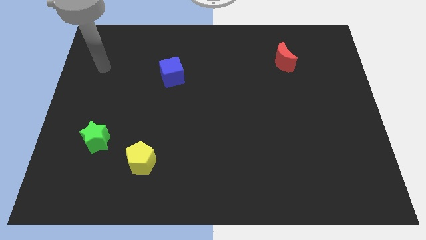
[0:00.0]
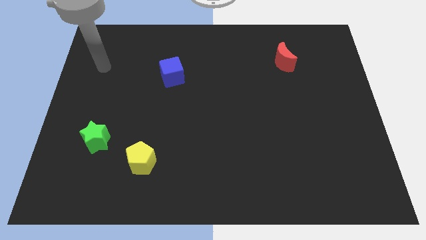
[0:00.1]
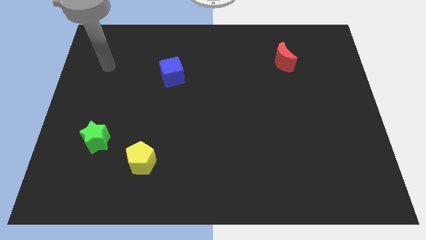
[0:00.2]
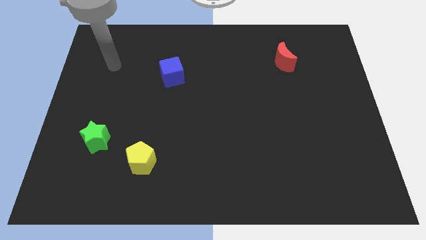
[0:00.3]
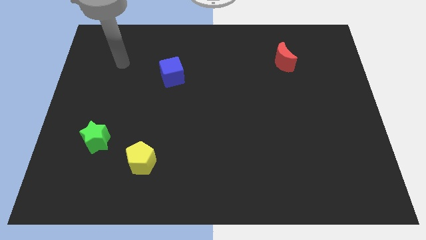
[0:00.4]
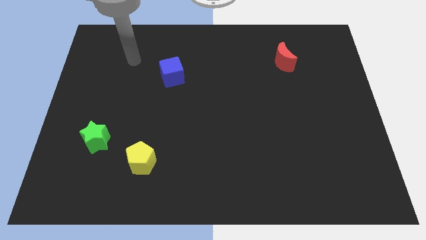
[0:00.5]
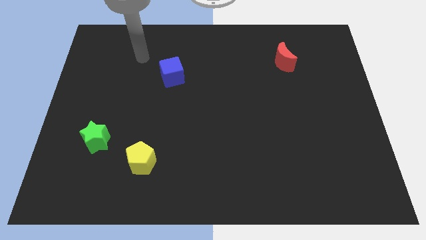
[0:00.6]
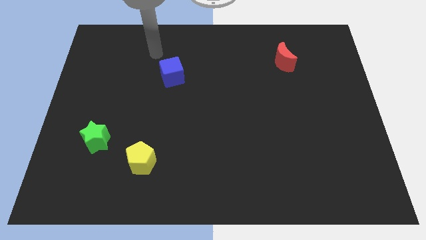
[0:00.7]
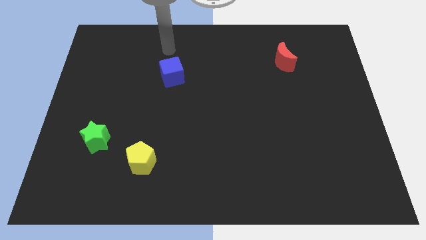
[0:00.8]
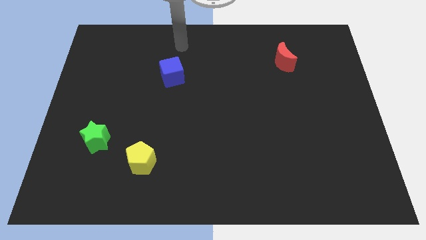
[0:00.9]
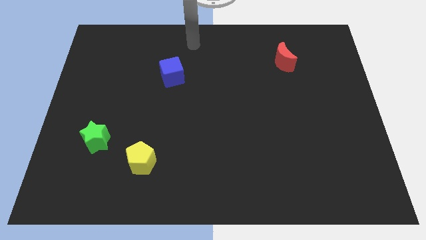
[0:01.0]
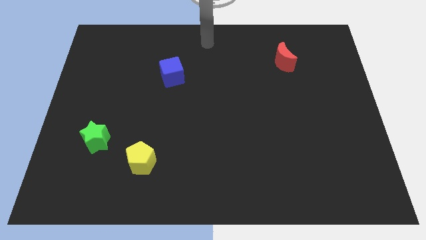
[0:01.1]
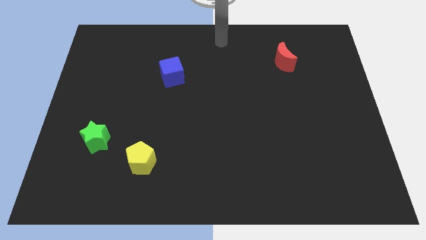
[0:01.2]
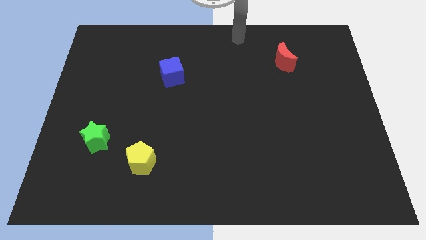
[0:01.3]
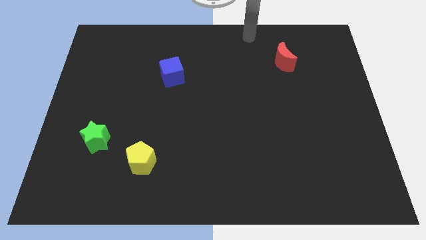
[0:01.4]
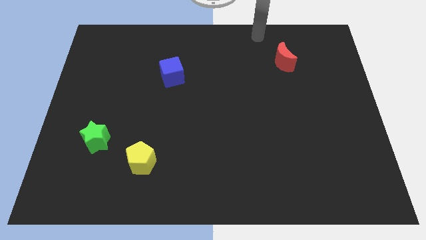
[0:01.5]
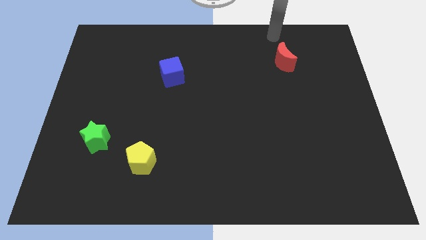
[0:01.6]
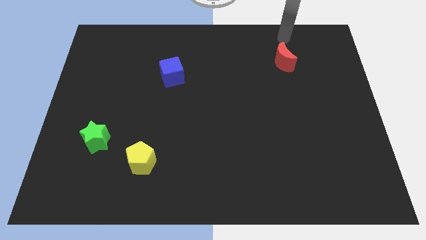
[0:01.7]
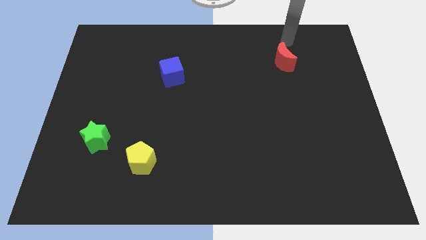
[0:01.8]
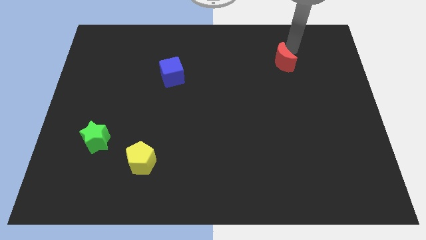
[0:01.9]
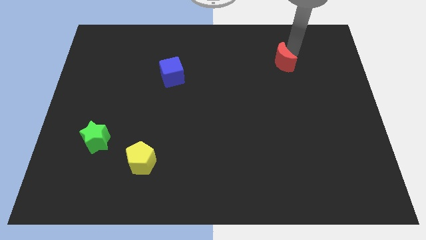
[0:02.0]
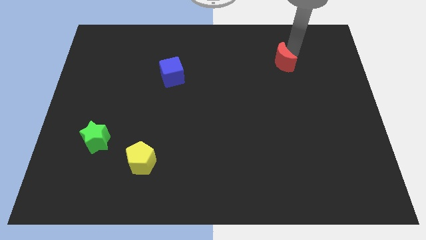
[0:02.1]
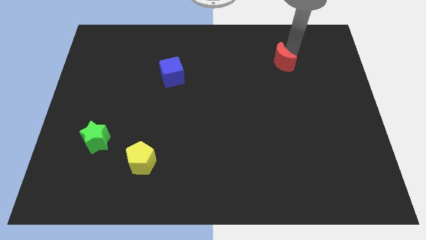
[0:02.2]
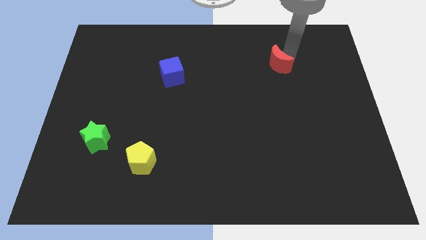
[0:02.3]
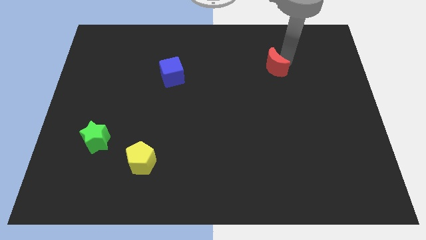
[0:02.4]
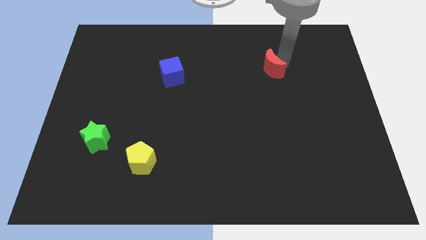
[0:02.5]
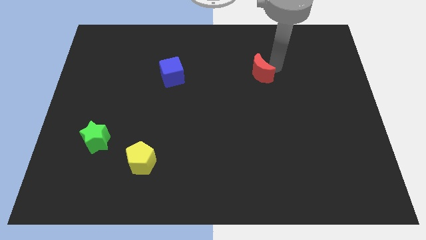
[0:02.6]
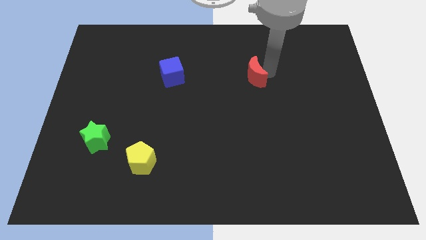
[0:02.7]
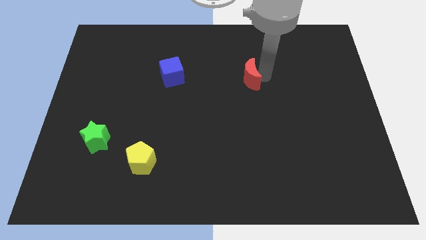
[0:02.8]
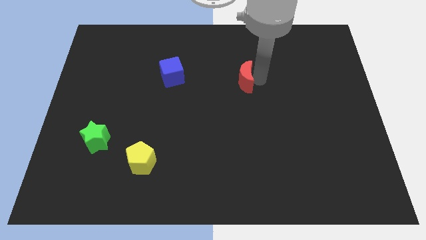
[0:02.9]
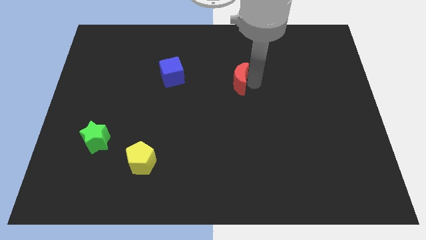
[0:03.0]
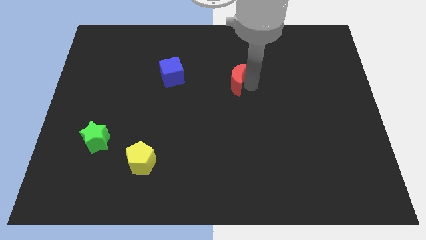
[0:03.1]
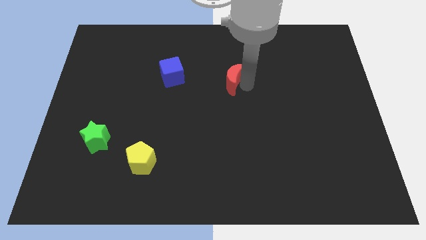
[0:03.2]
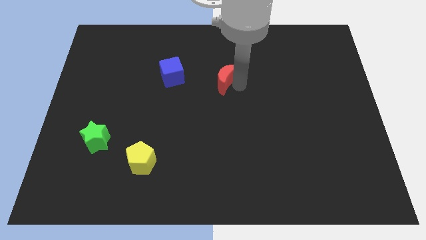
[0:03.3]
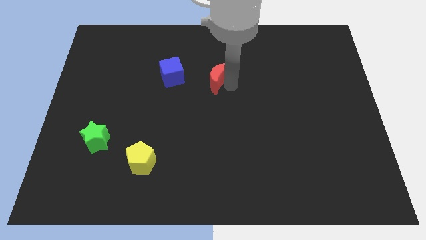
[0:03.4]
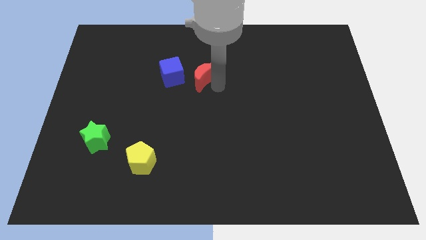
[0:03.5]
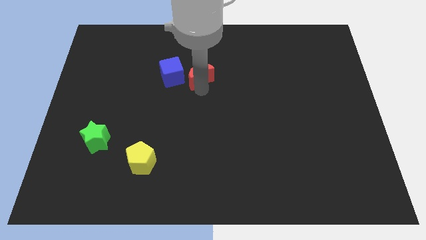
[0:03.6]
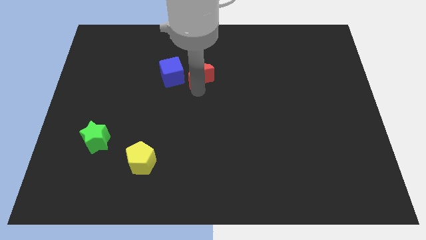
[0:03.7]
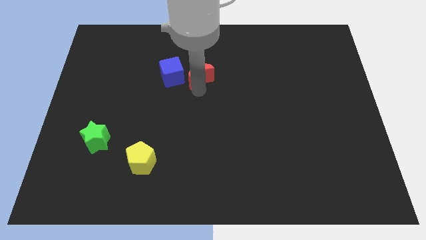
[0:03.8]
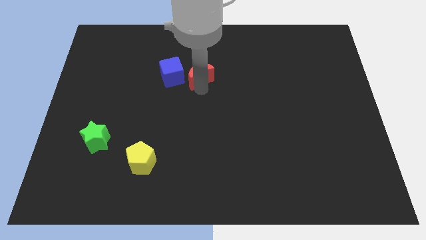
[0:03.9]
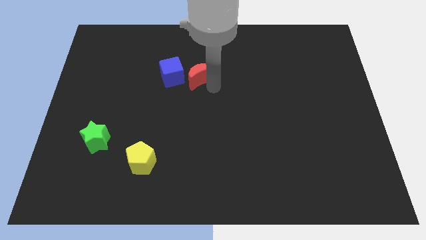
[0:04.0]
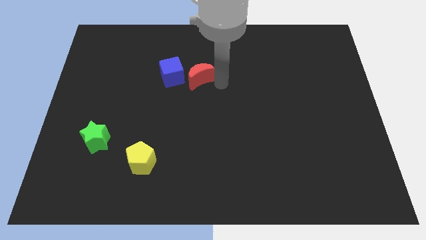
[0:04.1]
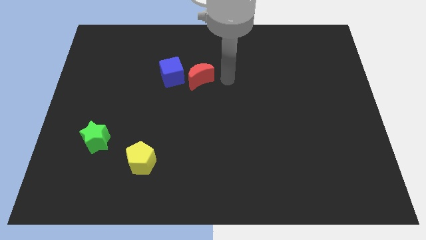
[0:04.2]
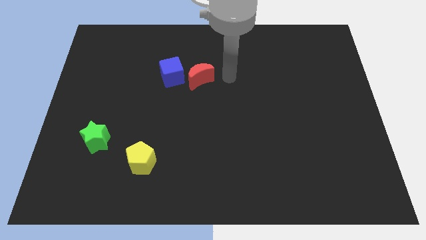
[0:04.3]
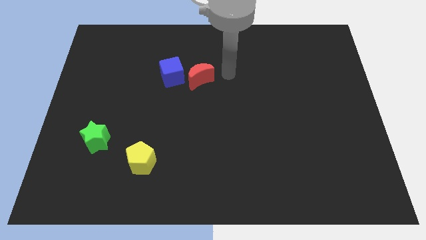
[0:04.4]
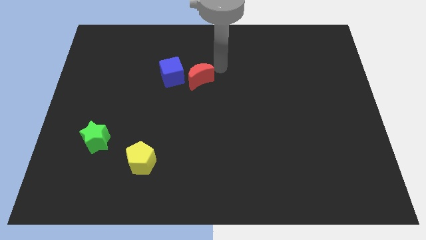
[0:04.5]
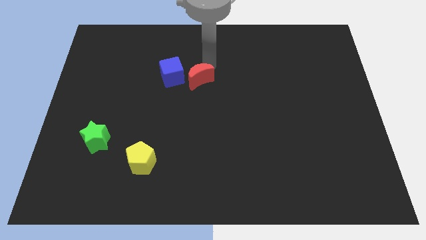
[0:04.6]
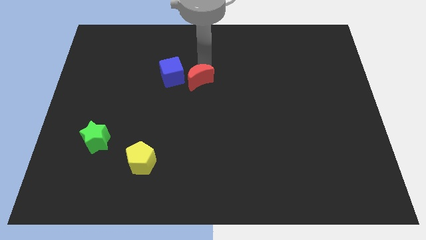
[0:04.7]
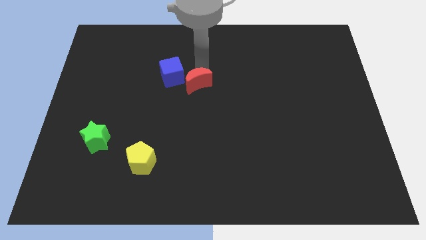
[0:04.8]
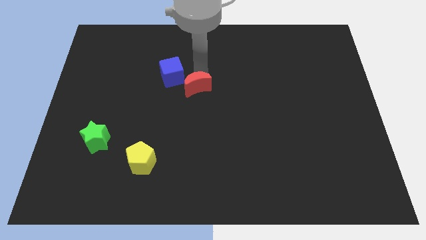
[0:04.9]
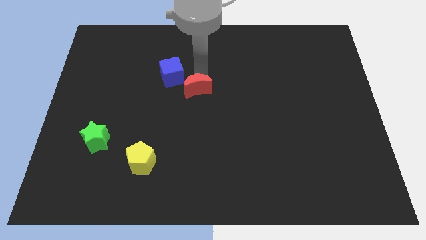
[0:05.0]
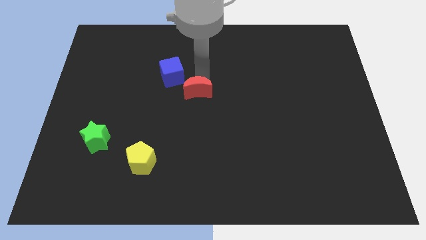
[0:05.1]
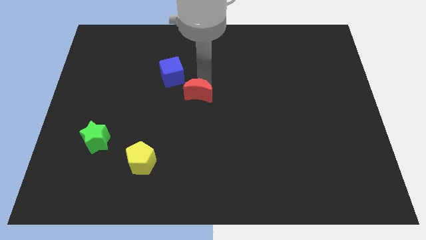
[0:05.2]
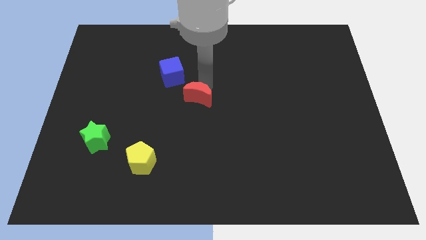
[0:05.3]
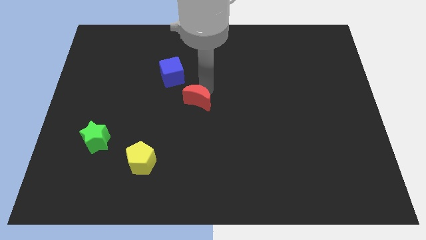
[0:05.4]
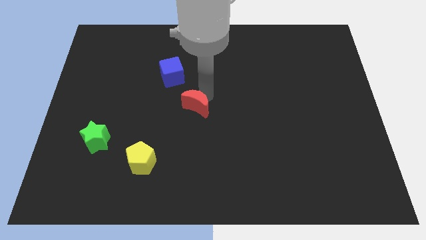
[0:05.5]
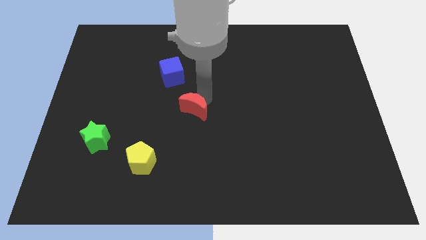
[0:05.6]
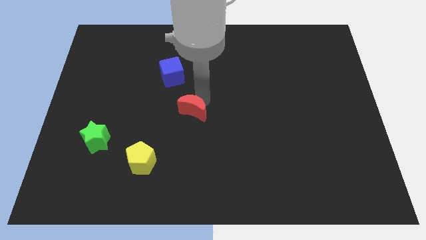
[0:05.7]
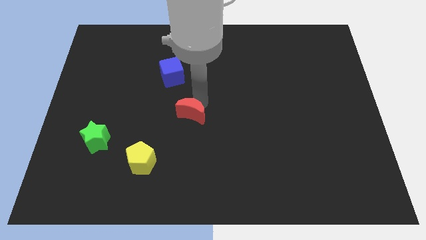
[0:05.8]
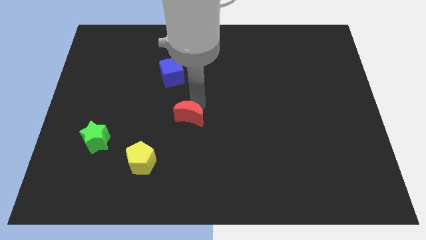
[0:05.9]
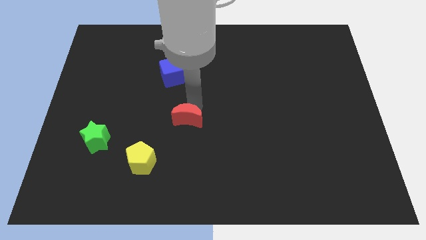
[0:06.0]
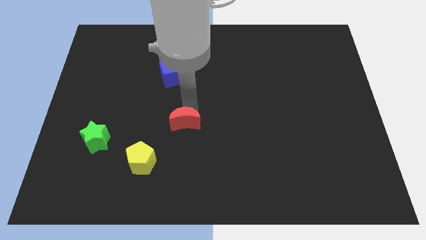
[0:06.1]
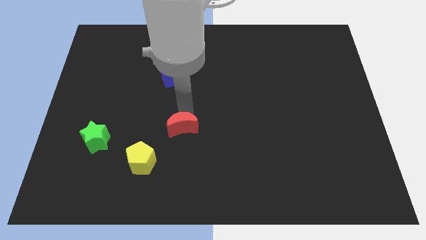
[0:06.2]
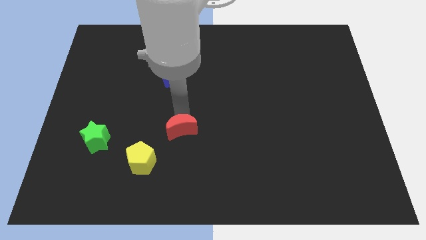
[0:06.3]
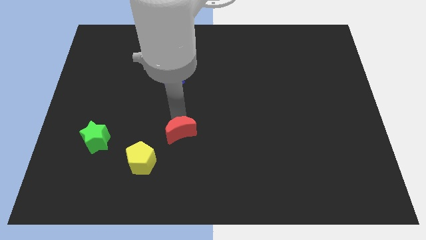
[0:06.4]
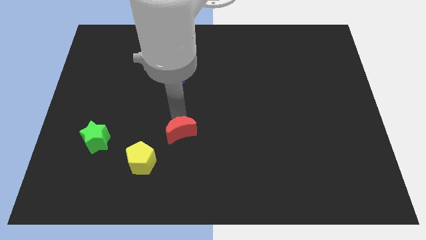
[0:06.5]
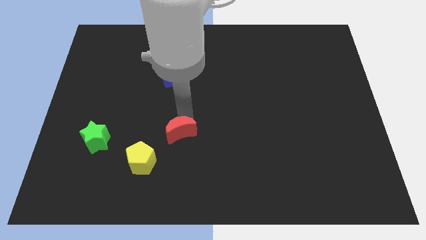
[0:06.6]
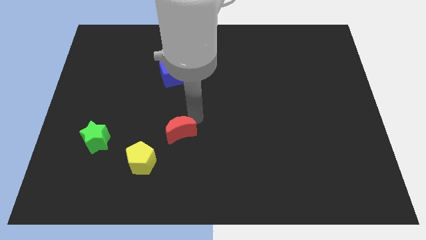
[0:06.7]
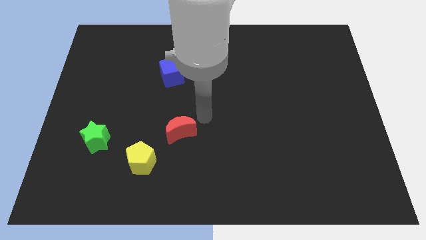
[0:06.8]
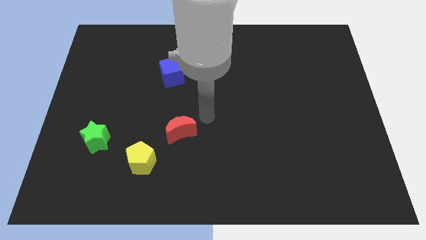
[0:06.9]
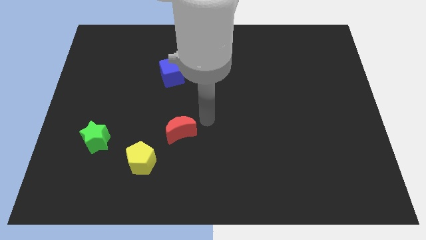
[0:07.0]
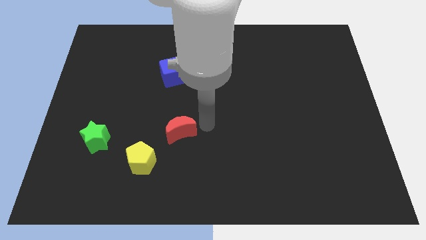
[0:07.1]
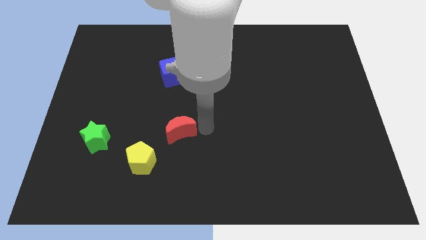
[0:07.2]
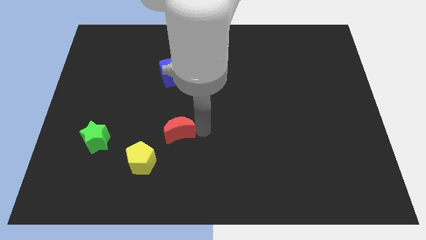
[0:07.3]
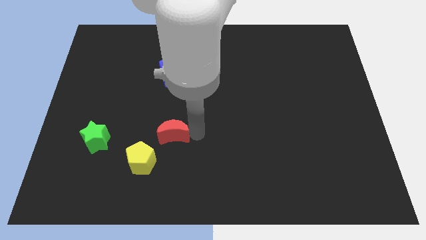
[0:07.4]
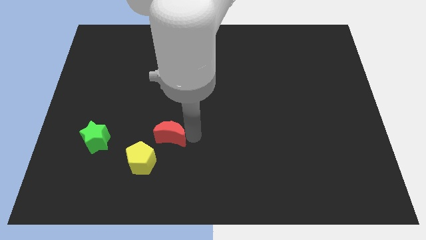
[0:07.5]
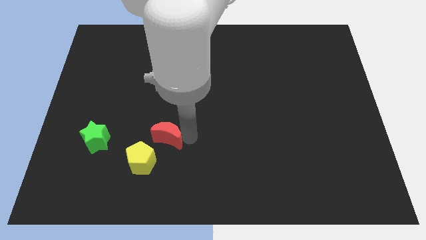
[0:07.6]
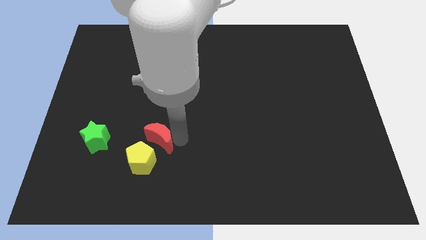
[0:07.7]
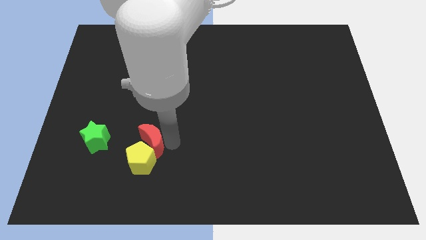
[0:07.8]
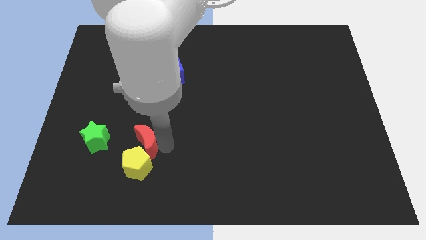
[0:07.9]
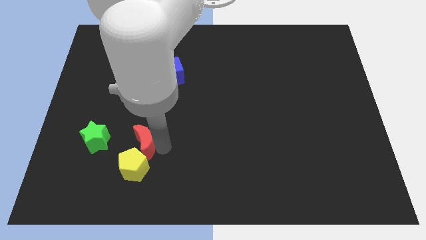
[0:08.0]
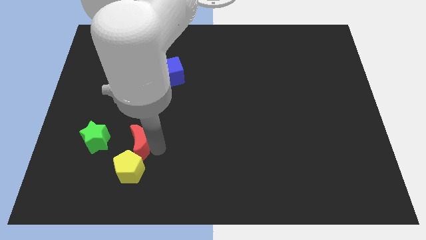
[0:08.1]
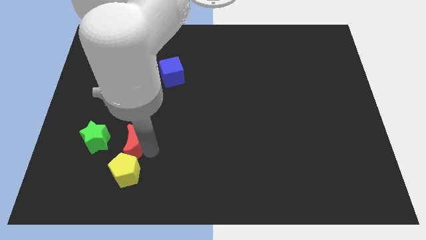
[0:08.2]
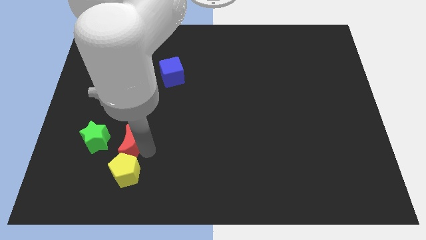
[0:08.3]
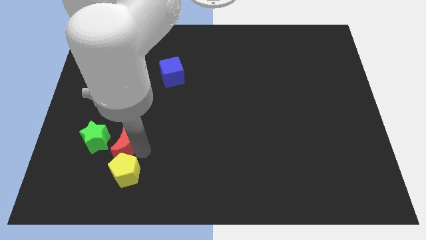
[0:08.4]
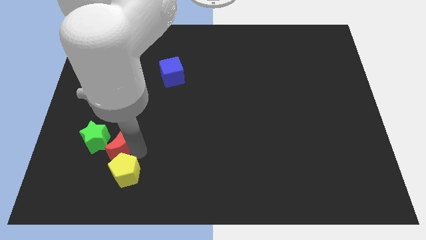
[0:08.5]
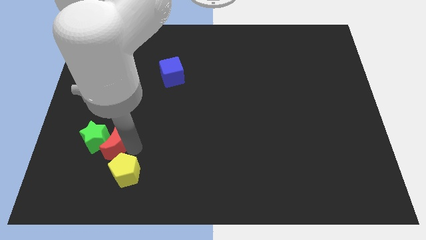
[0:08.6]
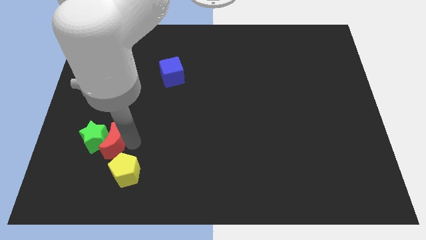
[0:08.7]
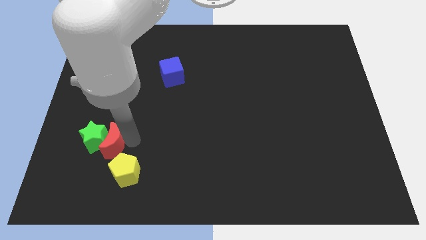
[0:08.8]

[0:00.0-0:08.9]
put the red block next to the green block
